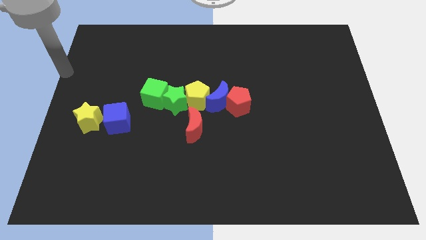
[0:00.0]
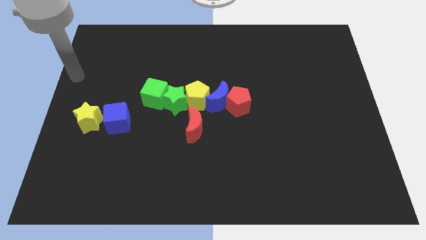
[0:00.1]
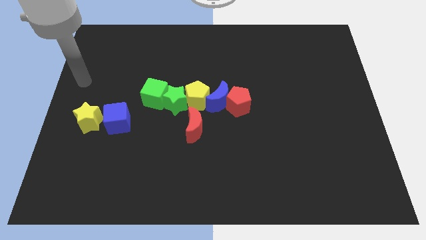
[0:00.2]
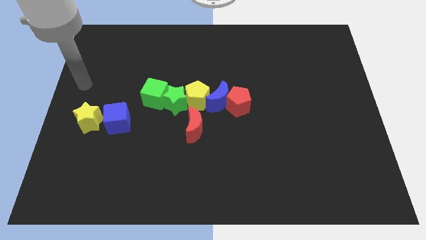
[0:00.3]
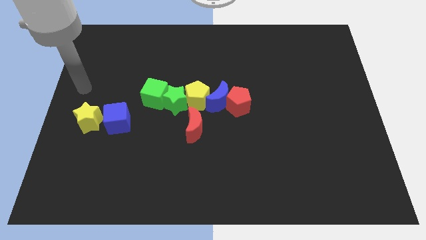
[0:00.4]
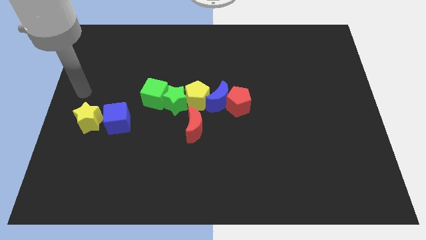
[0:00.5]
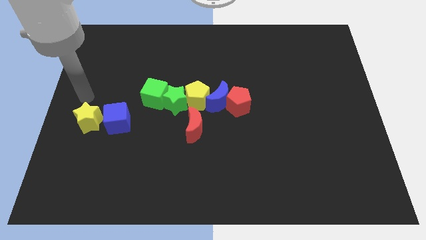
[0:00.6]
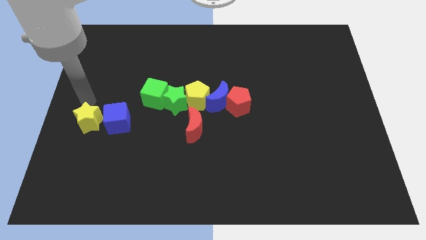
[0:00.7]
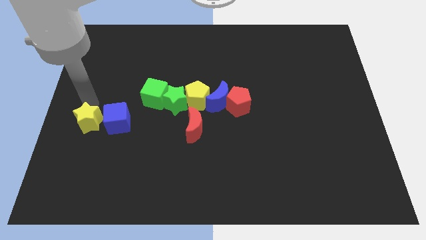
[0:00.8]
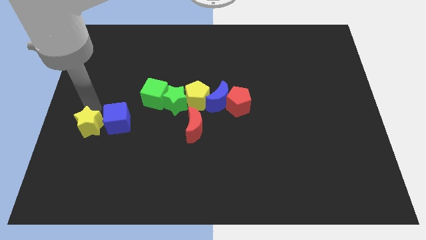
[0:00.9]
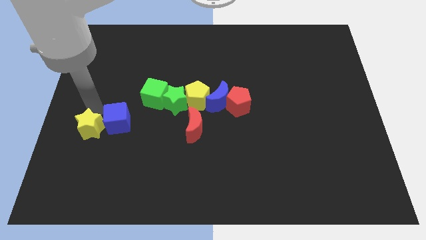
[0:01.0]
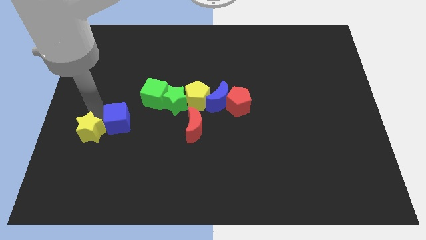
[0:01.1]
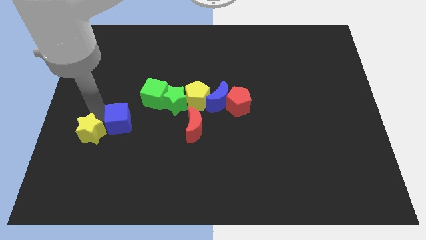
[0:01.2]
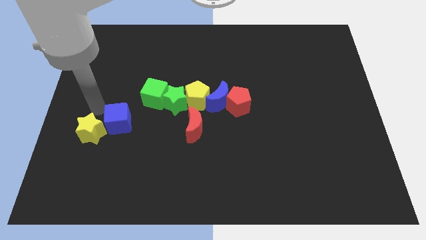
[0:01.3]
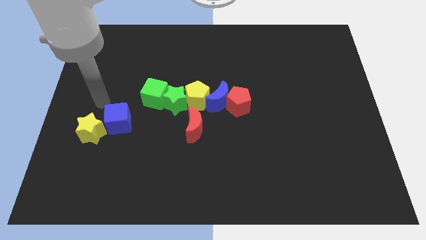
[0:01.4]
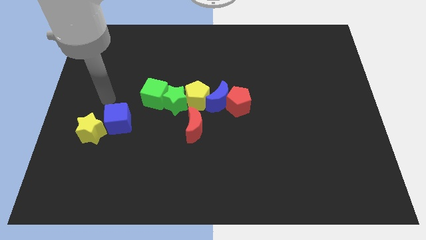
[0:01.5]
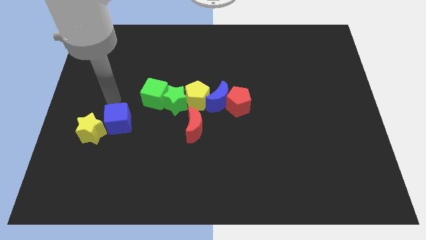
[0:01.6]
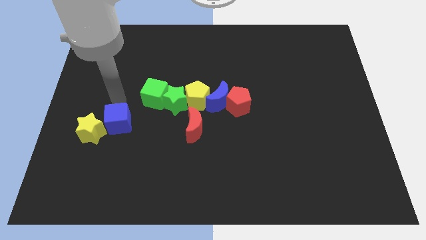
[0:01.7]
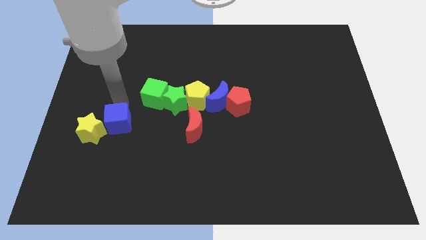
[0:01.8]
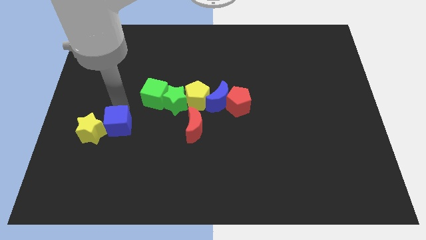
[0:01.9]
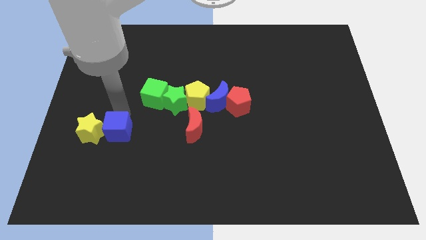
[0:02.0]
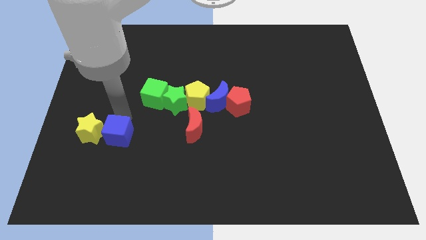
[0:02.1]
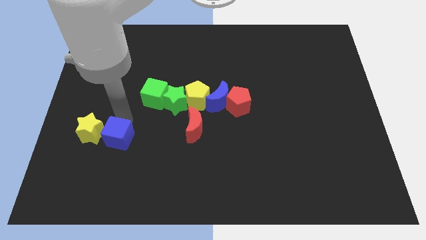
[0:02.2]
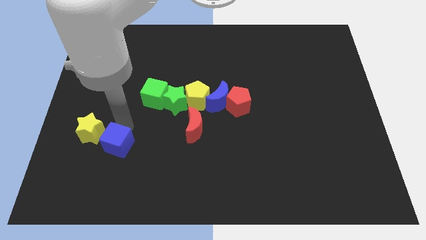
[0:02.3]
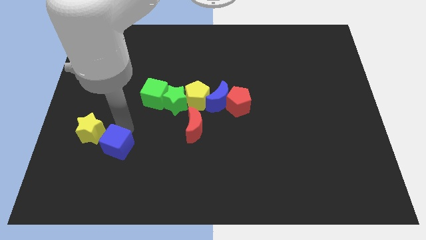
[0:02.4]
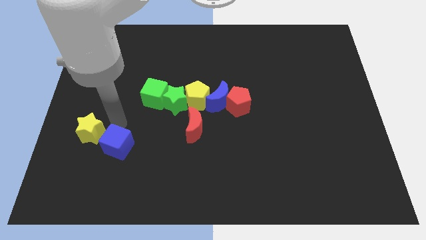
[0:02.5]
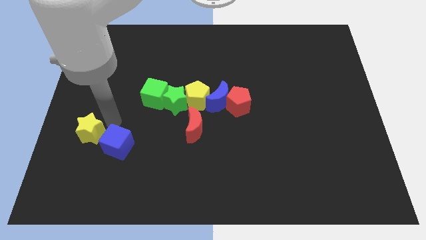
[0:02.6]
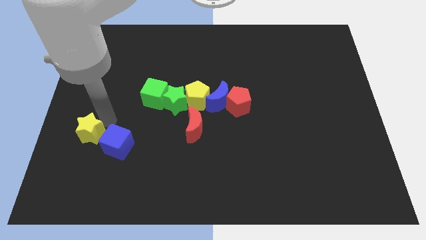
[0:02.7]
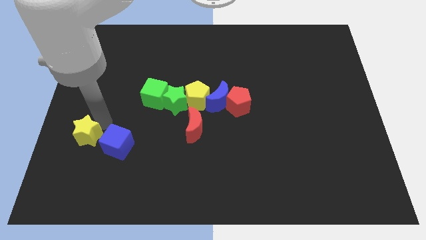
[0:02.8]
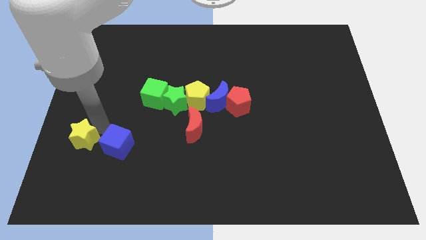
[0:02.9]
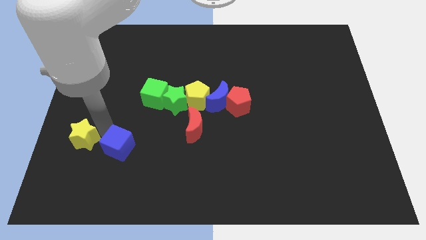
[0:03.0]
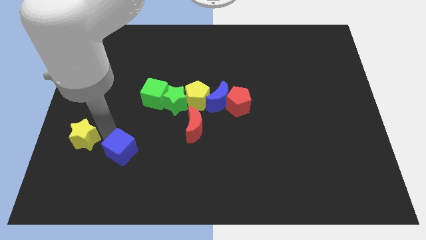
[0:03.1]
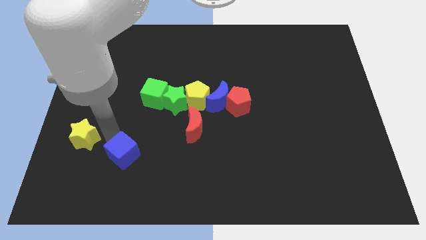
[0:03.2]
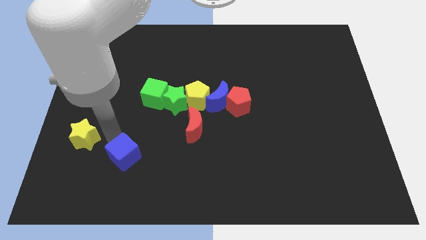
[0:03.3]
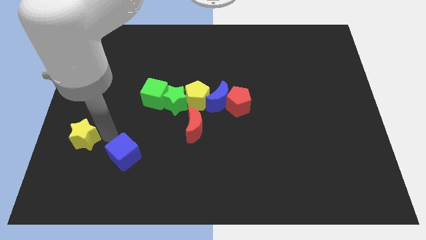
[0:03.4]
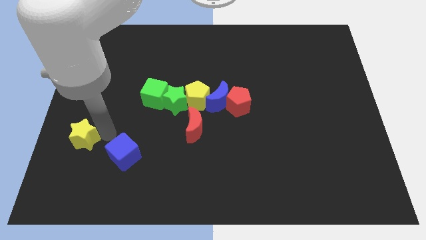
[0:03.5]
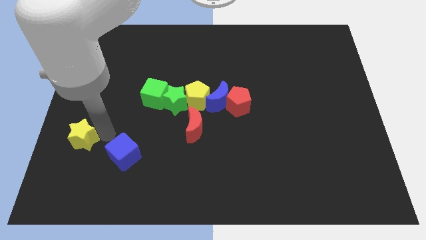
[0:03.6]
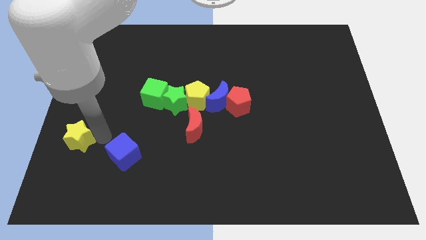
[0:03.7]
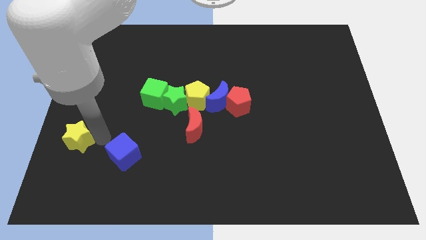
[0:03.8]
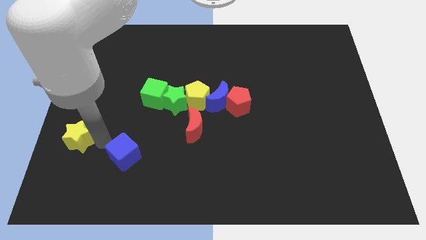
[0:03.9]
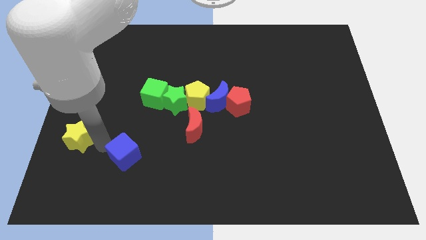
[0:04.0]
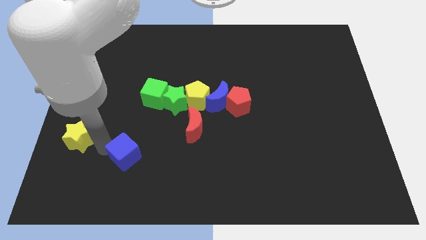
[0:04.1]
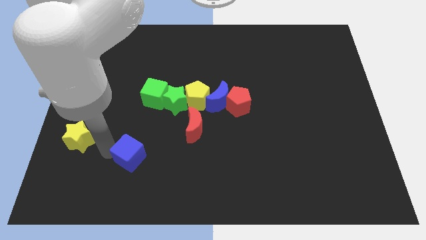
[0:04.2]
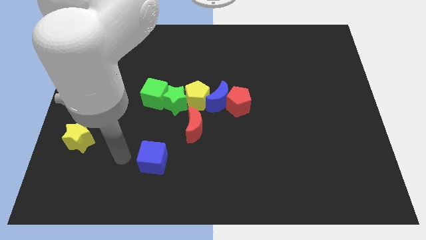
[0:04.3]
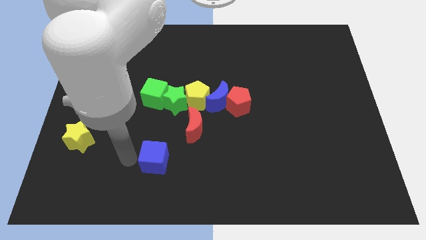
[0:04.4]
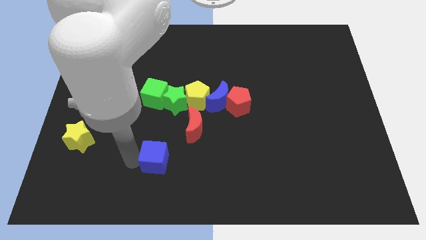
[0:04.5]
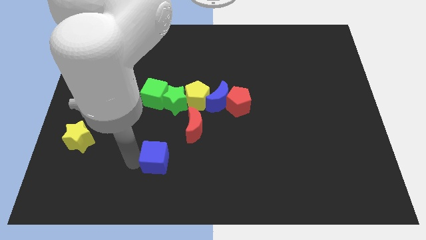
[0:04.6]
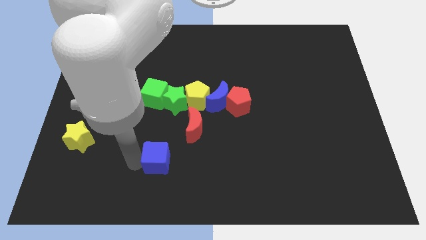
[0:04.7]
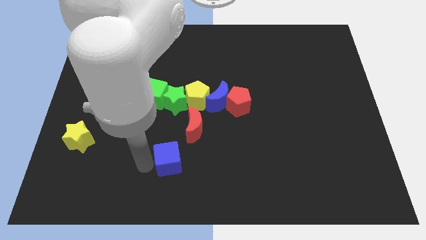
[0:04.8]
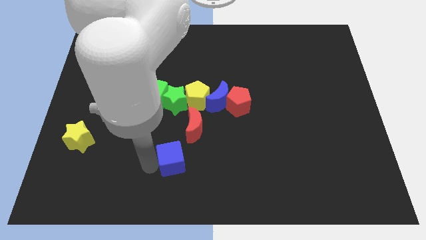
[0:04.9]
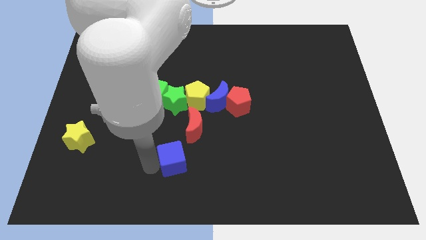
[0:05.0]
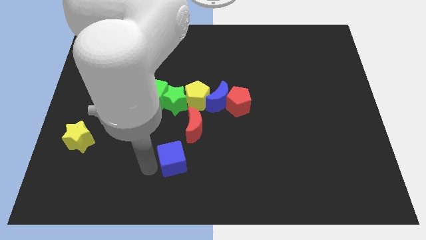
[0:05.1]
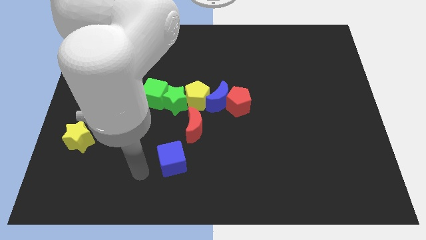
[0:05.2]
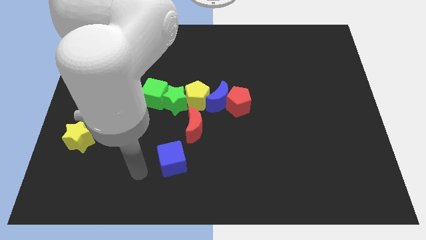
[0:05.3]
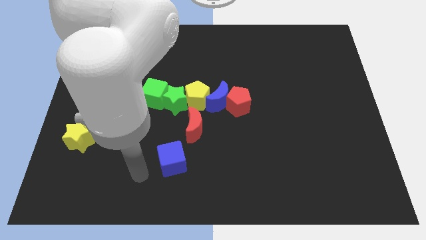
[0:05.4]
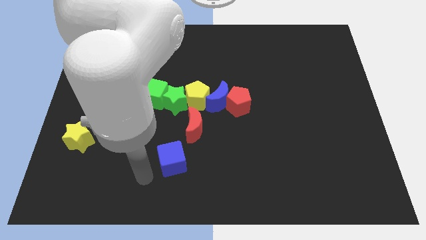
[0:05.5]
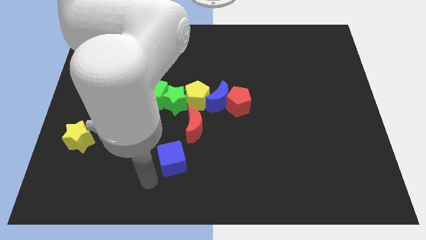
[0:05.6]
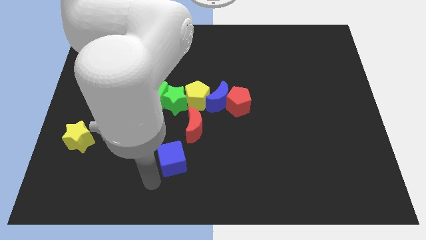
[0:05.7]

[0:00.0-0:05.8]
push blue cube below green star

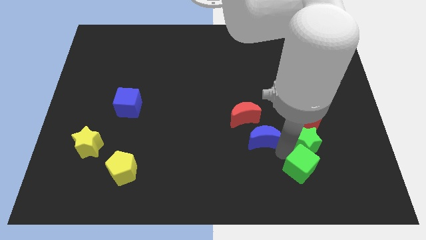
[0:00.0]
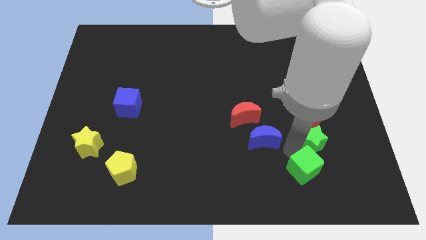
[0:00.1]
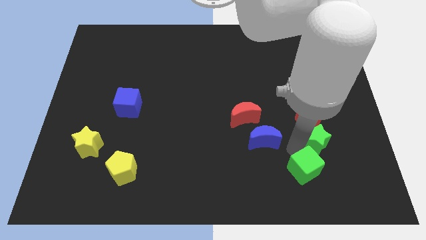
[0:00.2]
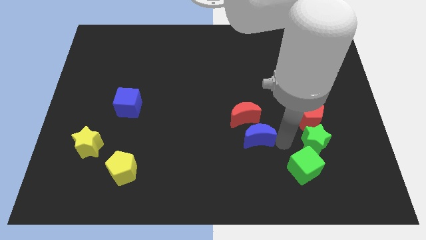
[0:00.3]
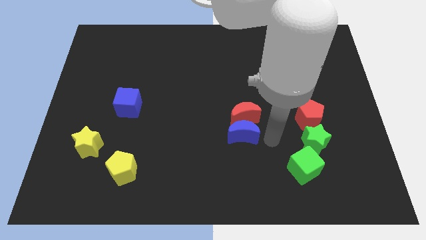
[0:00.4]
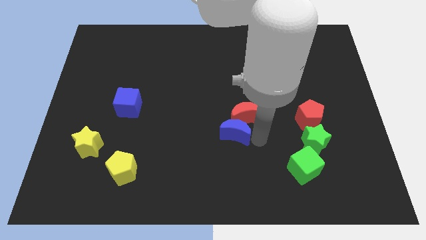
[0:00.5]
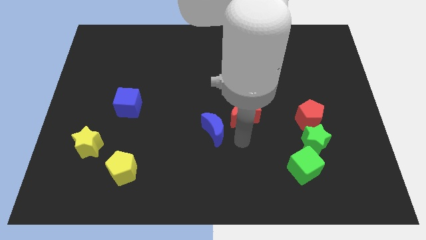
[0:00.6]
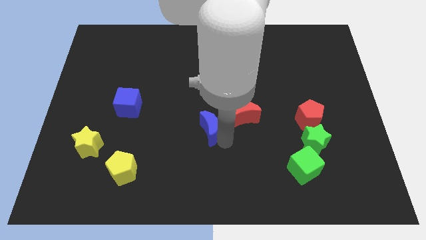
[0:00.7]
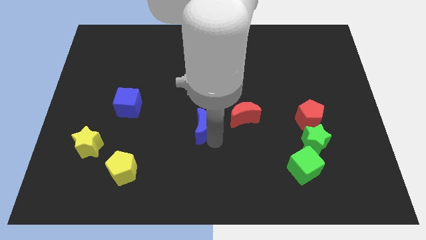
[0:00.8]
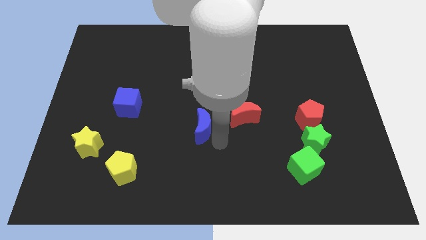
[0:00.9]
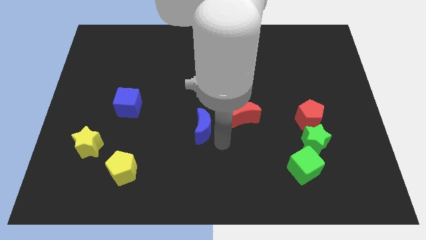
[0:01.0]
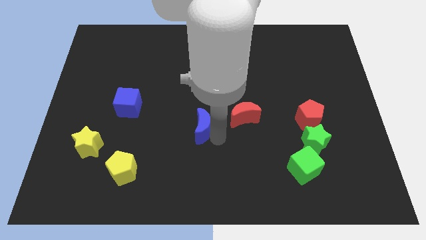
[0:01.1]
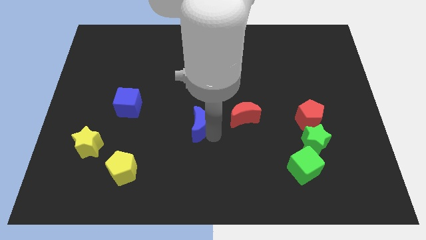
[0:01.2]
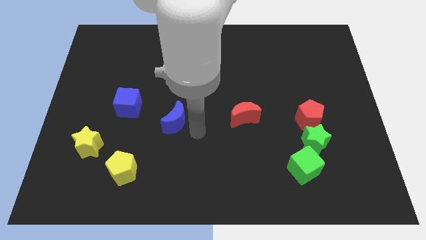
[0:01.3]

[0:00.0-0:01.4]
place the blue moon to the left of the red moon

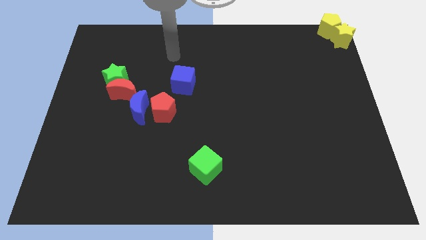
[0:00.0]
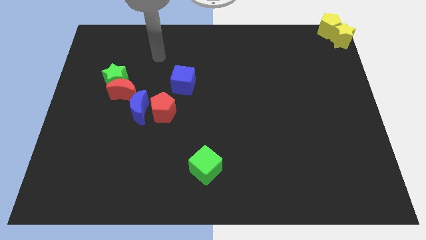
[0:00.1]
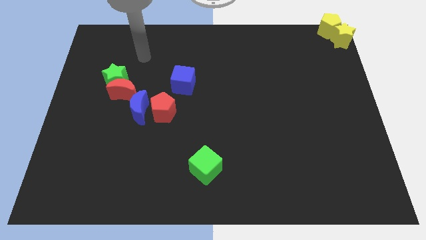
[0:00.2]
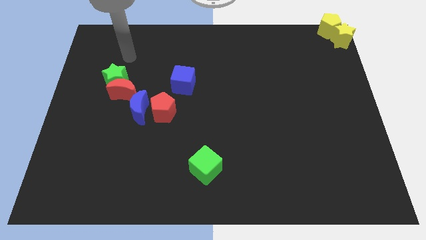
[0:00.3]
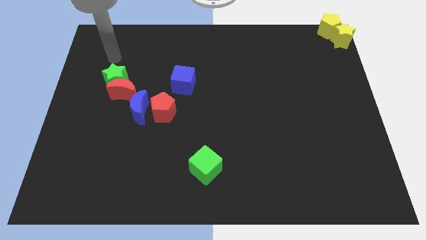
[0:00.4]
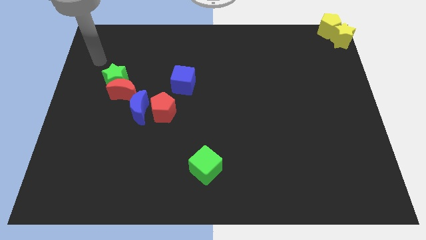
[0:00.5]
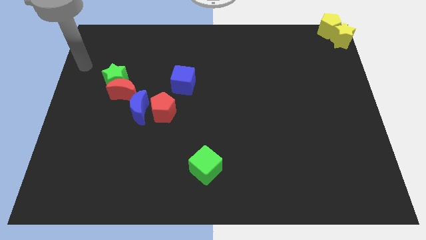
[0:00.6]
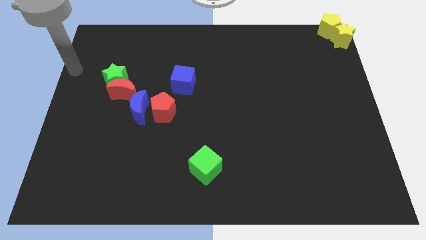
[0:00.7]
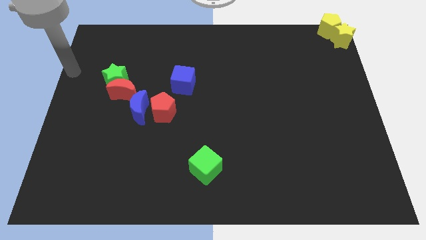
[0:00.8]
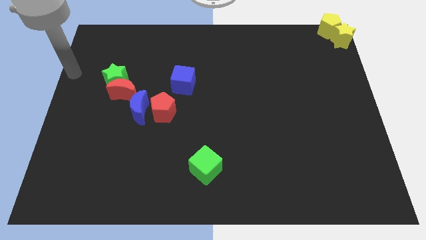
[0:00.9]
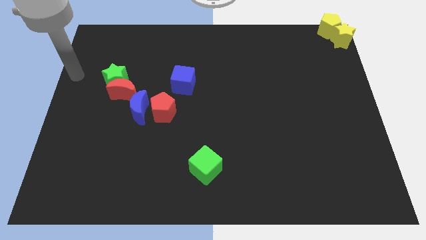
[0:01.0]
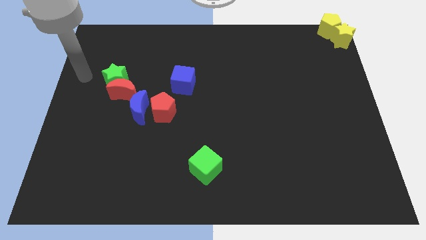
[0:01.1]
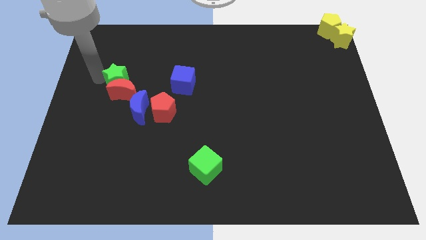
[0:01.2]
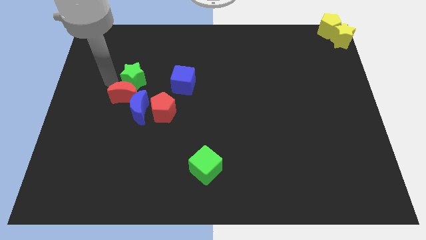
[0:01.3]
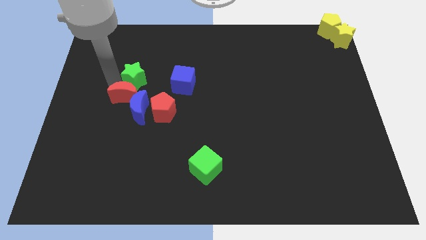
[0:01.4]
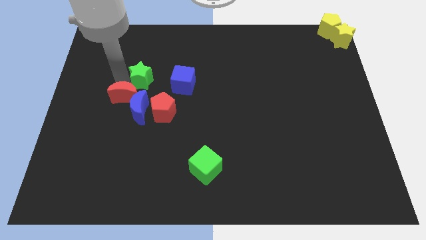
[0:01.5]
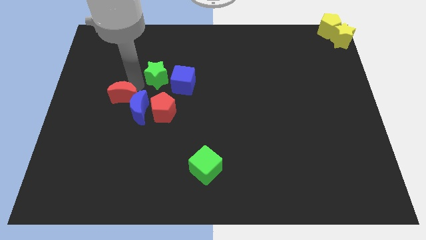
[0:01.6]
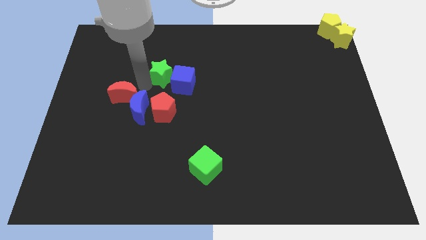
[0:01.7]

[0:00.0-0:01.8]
move the green star above the red pentagon
